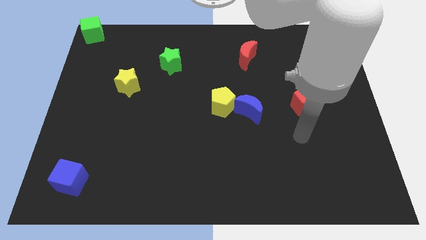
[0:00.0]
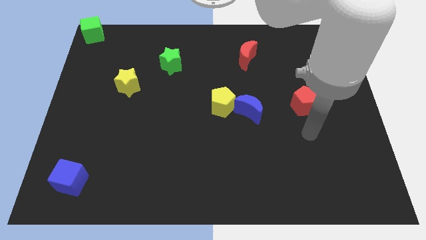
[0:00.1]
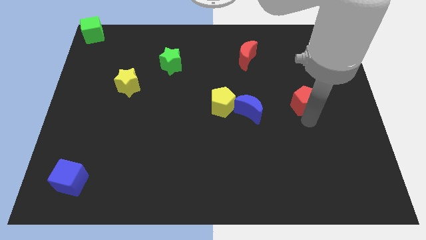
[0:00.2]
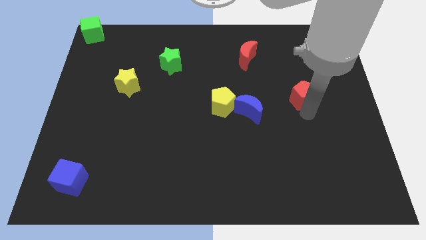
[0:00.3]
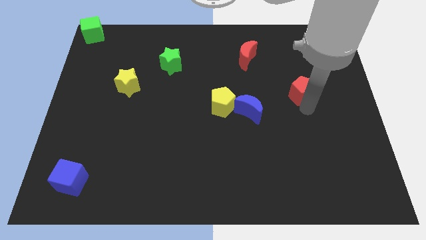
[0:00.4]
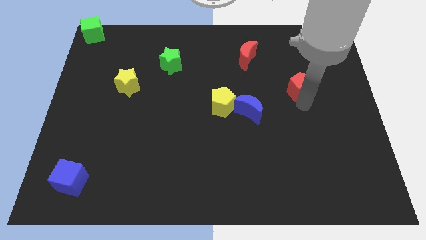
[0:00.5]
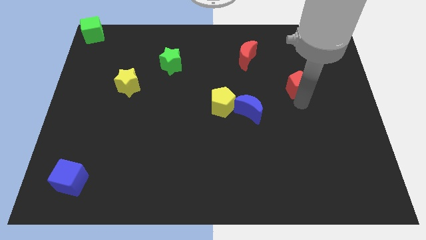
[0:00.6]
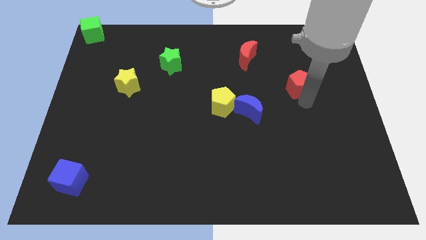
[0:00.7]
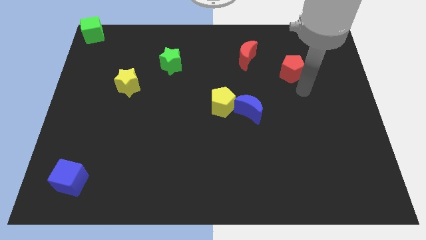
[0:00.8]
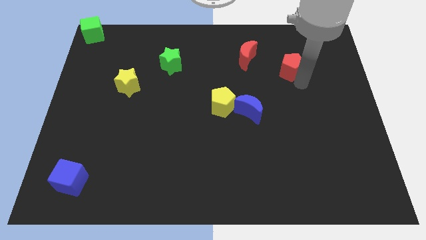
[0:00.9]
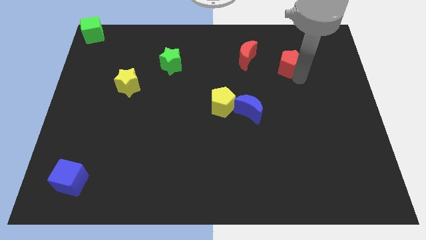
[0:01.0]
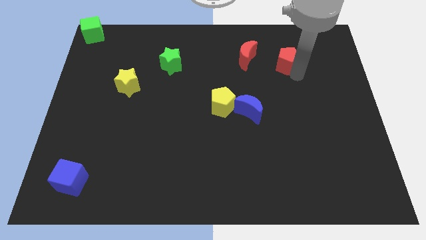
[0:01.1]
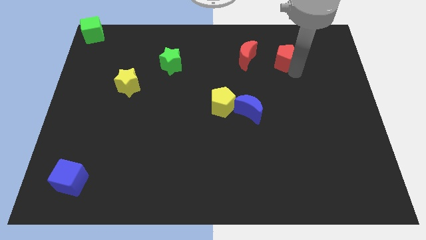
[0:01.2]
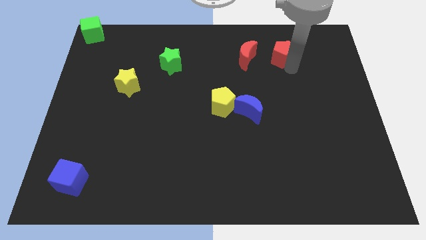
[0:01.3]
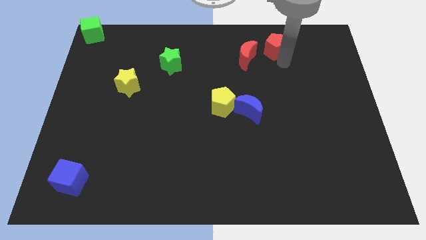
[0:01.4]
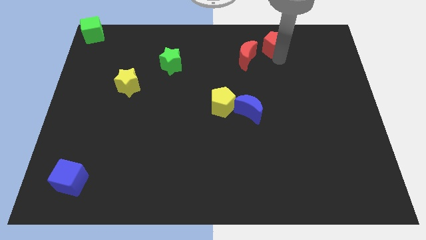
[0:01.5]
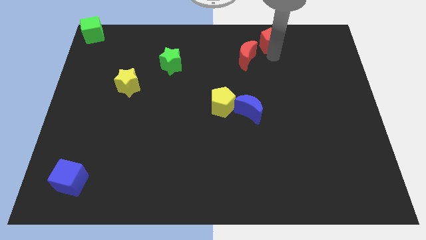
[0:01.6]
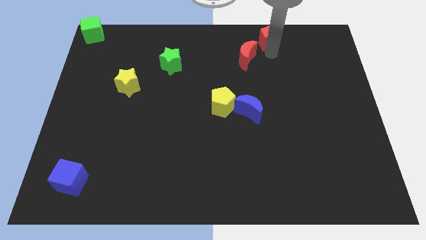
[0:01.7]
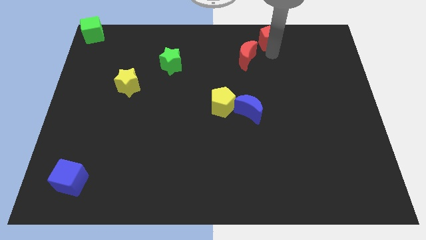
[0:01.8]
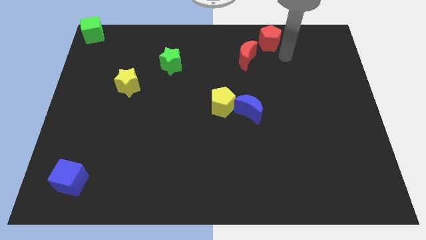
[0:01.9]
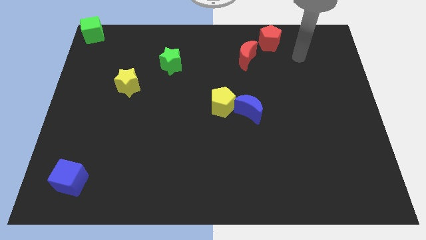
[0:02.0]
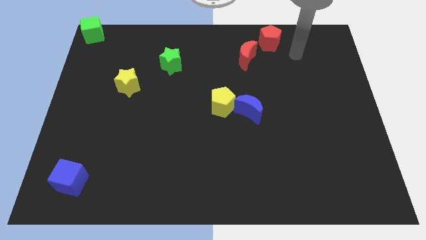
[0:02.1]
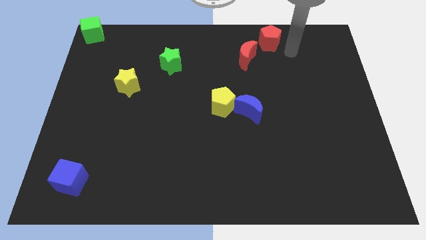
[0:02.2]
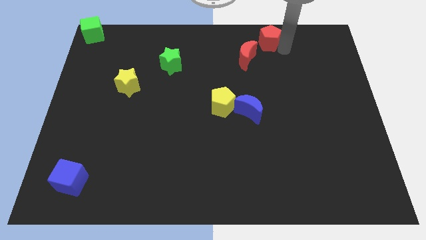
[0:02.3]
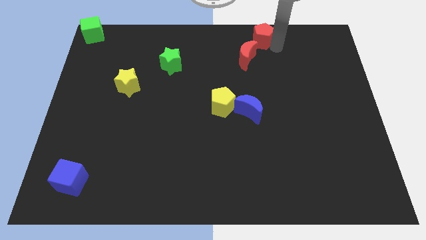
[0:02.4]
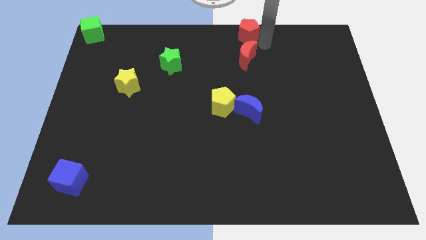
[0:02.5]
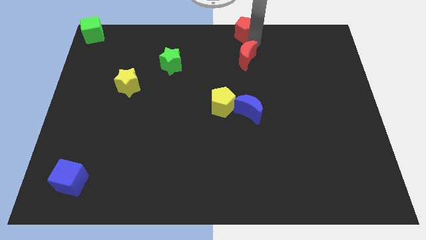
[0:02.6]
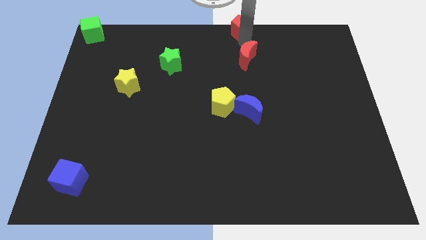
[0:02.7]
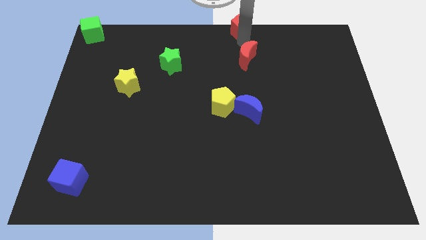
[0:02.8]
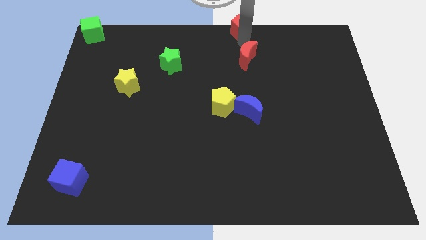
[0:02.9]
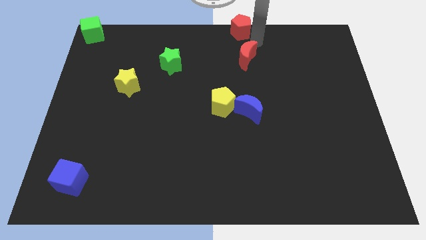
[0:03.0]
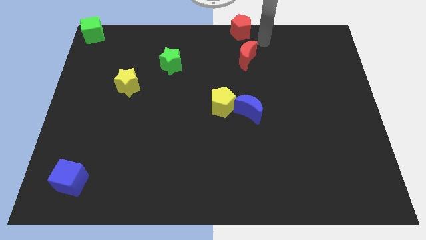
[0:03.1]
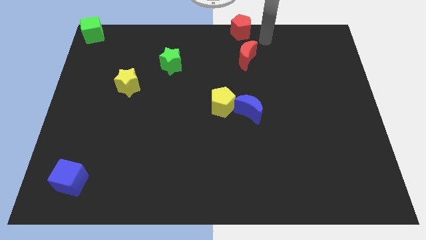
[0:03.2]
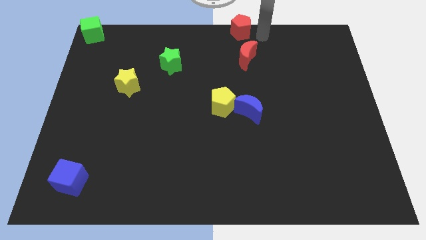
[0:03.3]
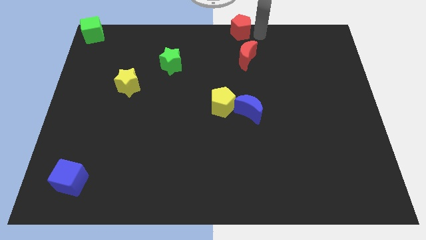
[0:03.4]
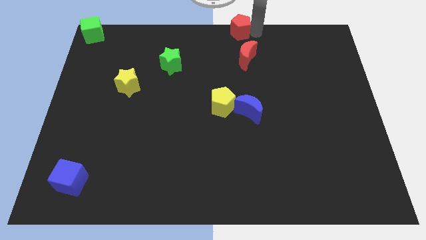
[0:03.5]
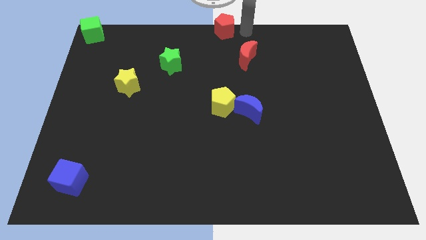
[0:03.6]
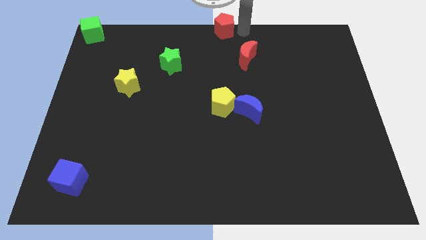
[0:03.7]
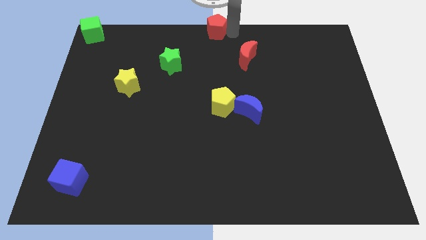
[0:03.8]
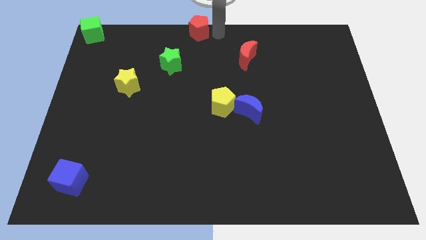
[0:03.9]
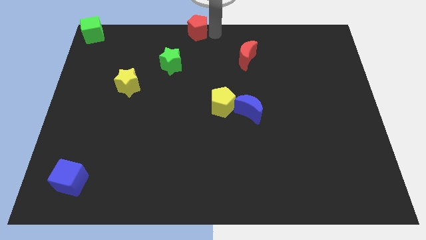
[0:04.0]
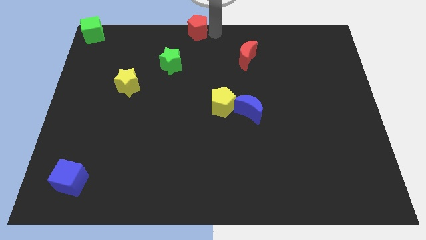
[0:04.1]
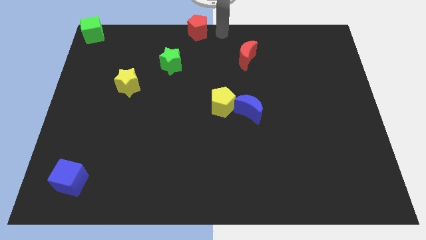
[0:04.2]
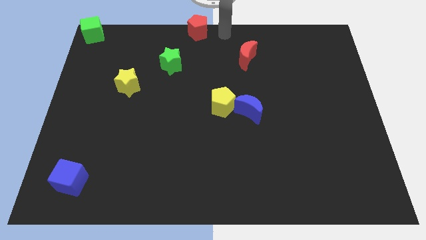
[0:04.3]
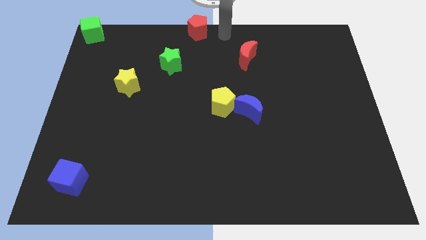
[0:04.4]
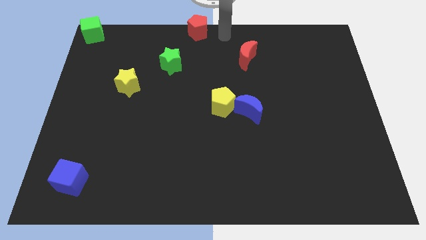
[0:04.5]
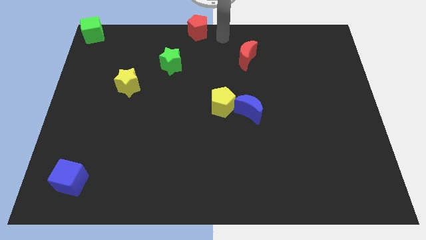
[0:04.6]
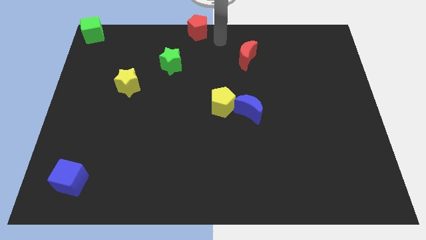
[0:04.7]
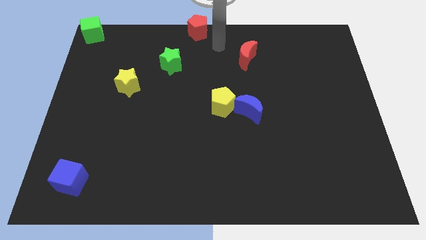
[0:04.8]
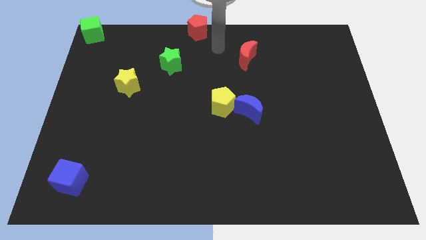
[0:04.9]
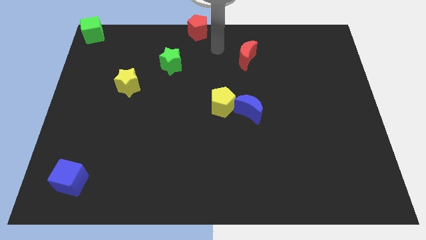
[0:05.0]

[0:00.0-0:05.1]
move the red pentagon to the top centre of the board

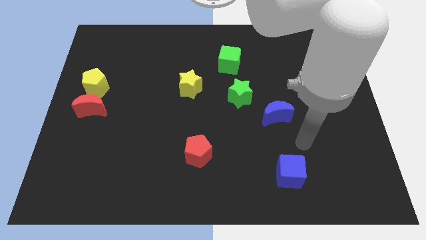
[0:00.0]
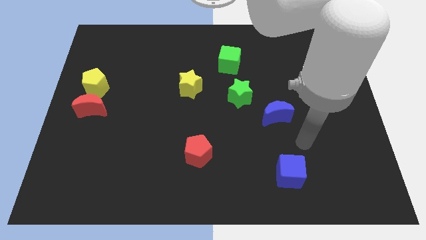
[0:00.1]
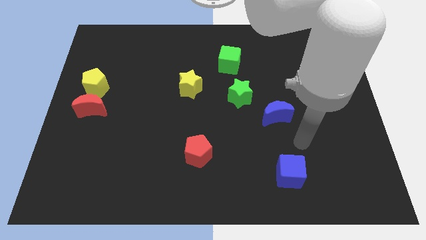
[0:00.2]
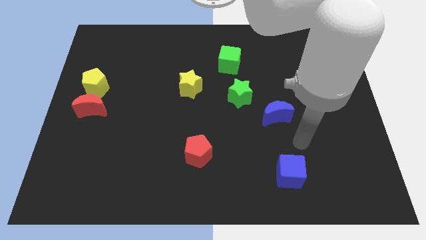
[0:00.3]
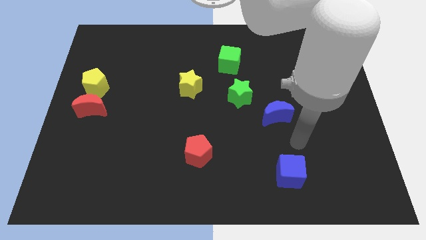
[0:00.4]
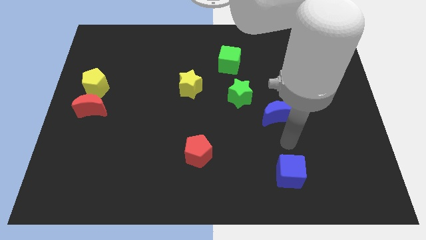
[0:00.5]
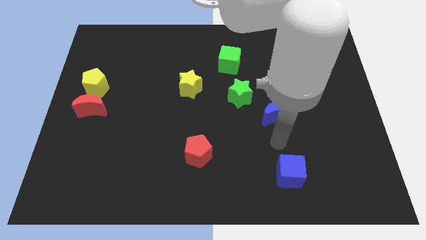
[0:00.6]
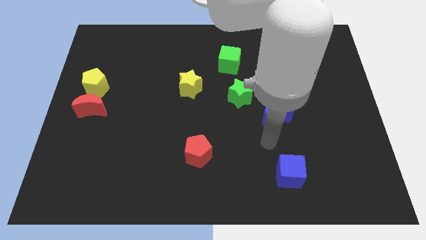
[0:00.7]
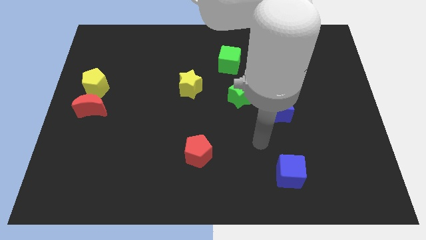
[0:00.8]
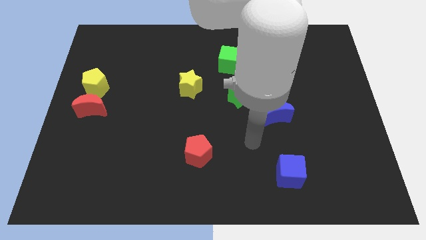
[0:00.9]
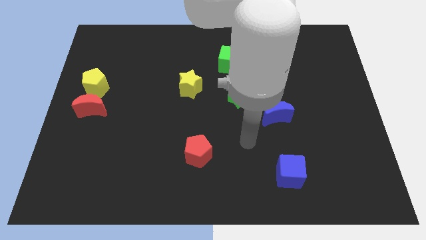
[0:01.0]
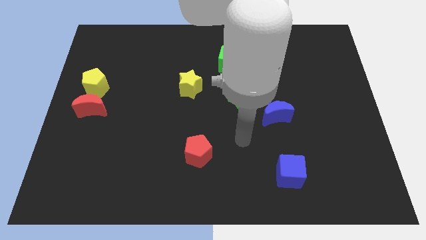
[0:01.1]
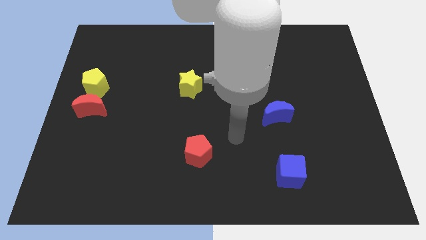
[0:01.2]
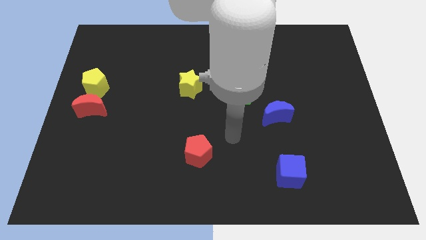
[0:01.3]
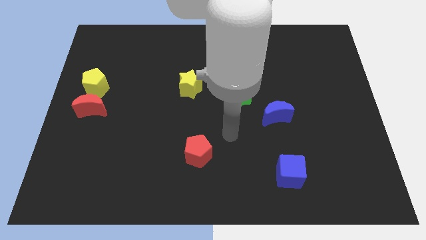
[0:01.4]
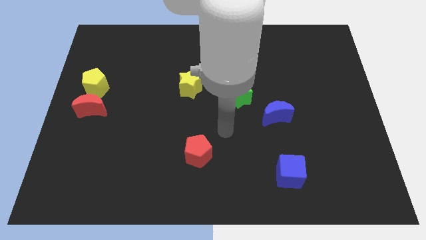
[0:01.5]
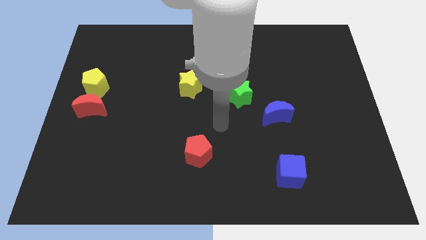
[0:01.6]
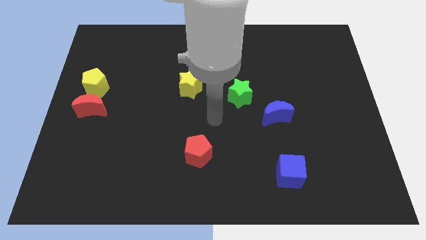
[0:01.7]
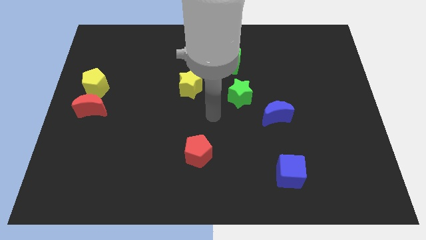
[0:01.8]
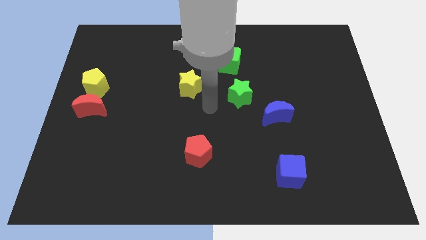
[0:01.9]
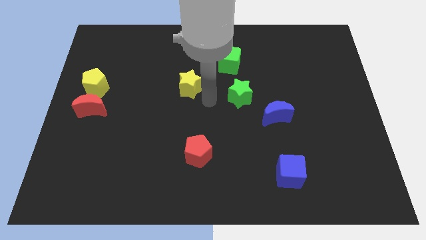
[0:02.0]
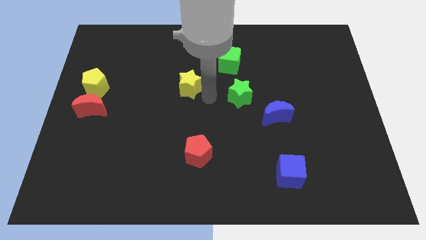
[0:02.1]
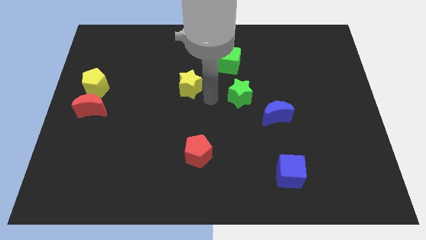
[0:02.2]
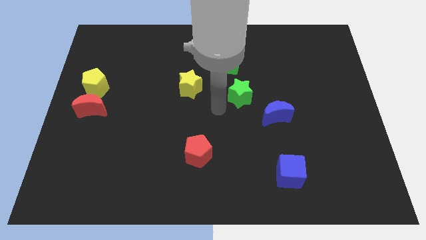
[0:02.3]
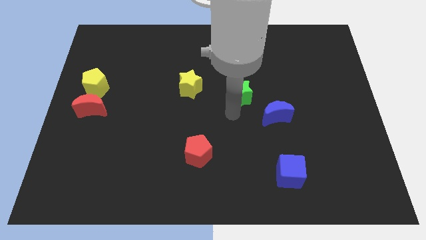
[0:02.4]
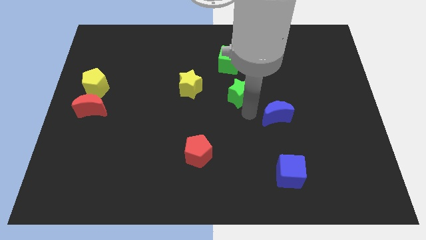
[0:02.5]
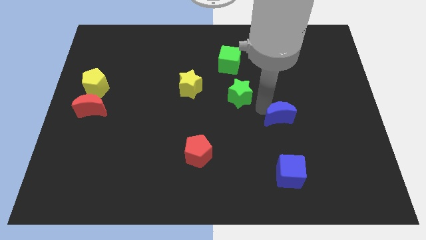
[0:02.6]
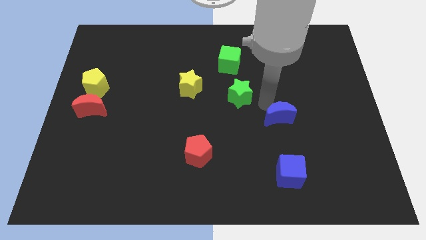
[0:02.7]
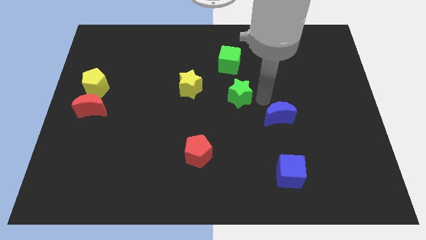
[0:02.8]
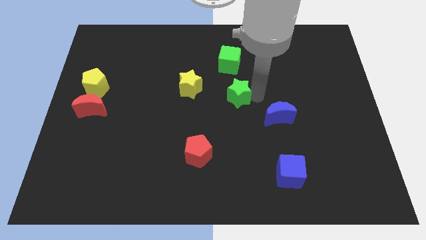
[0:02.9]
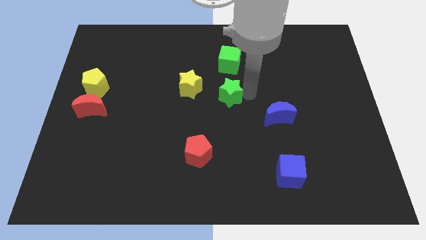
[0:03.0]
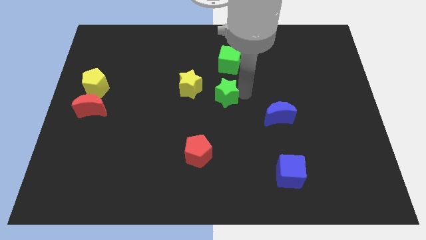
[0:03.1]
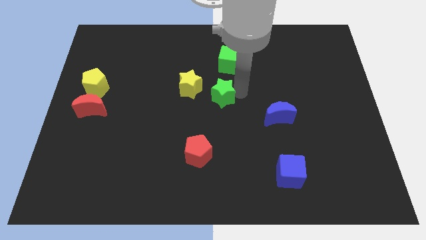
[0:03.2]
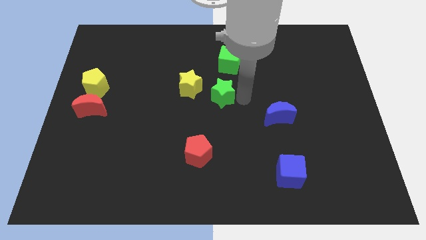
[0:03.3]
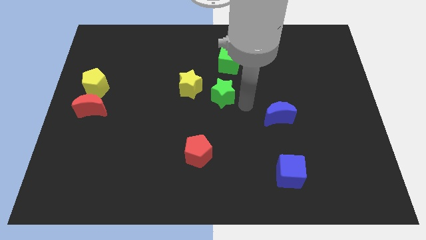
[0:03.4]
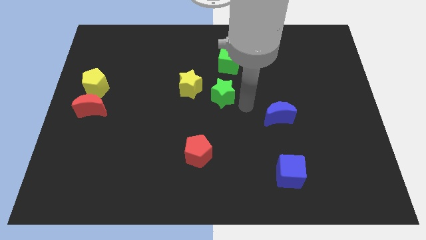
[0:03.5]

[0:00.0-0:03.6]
move green star slightly to center

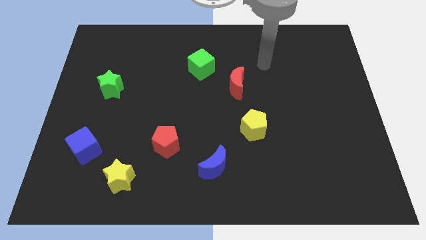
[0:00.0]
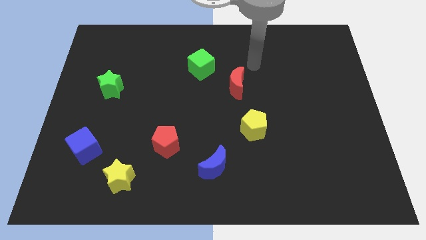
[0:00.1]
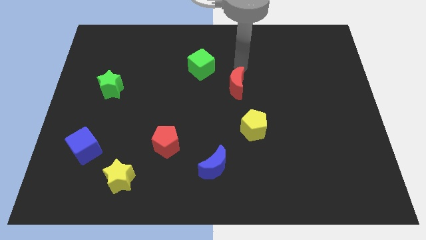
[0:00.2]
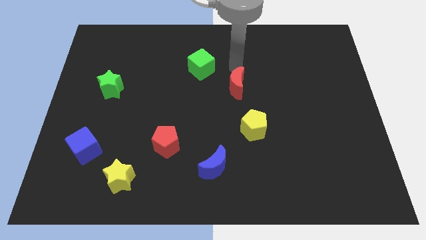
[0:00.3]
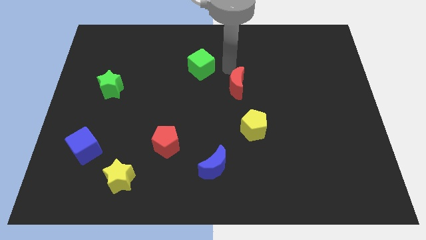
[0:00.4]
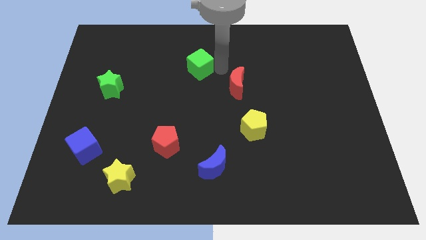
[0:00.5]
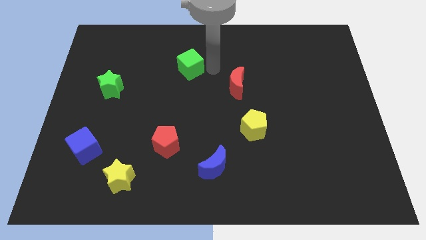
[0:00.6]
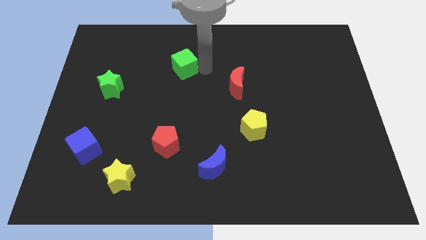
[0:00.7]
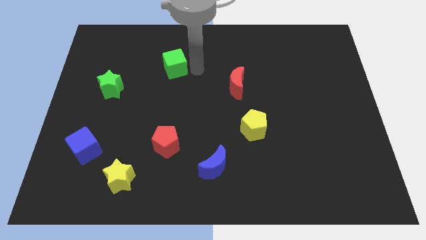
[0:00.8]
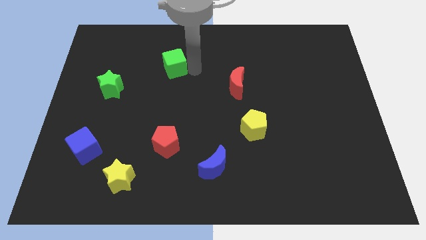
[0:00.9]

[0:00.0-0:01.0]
push the green cube towards left
